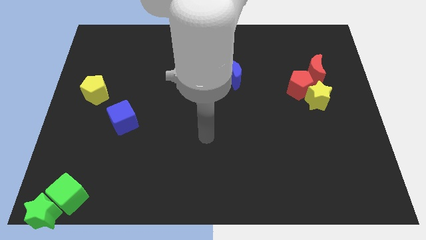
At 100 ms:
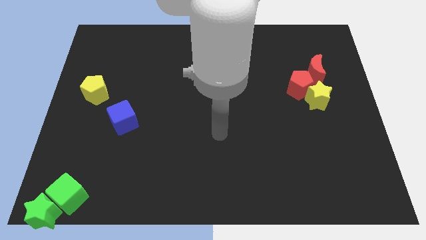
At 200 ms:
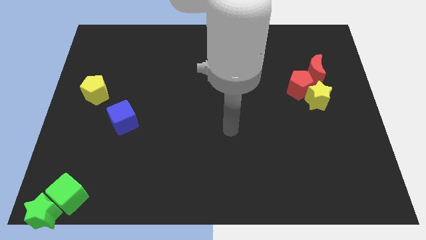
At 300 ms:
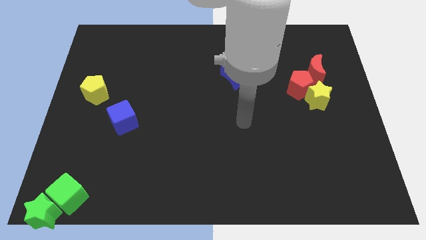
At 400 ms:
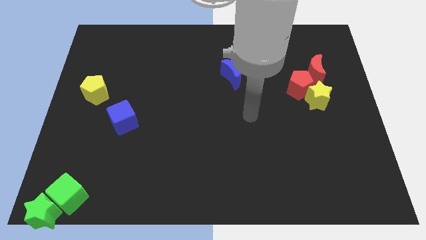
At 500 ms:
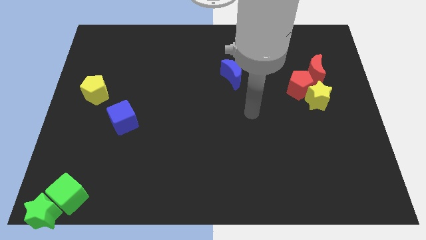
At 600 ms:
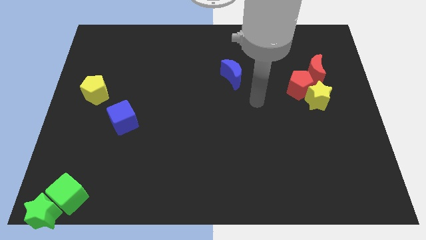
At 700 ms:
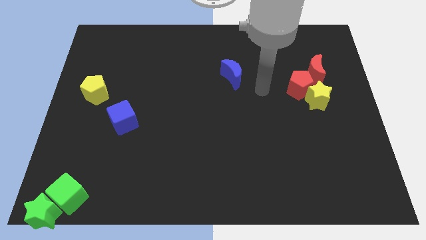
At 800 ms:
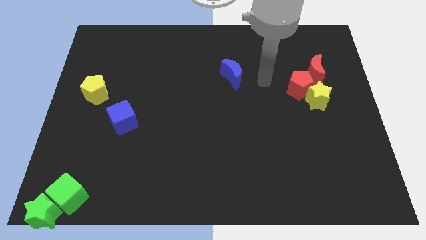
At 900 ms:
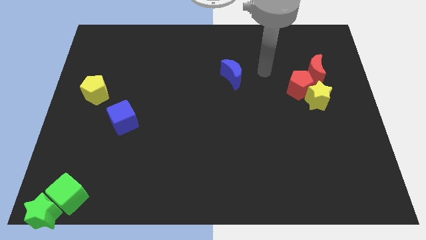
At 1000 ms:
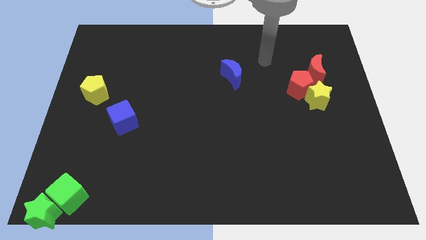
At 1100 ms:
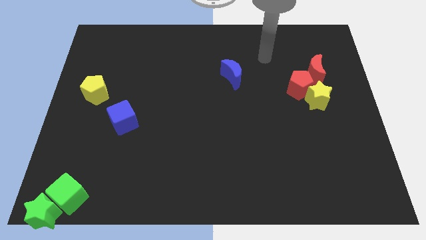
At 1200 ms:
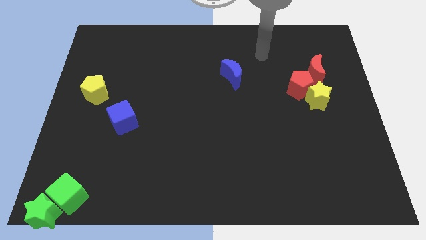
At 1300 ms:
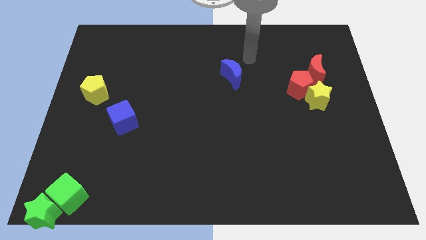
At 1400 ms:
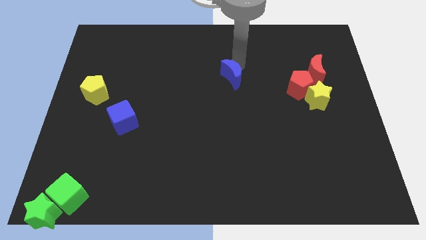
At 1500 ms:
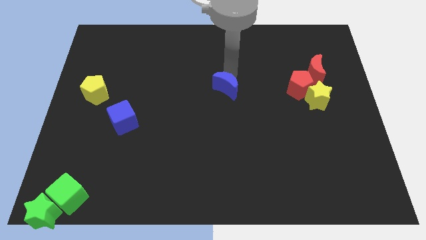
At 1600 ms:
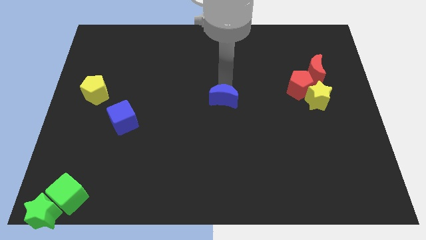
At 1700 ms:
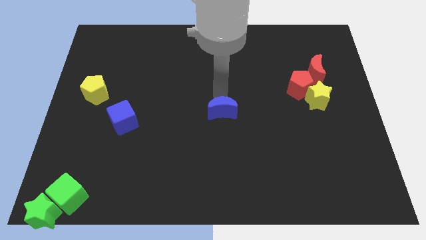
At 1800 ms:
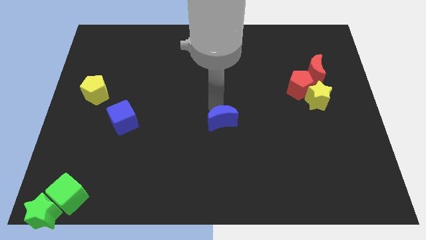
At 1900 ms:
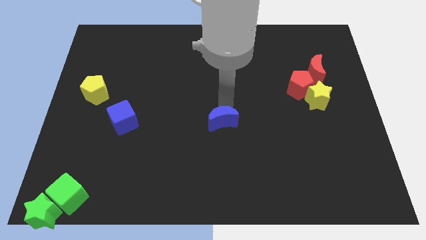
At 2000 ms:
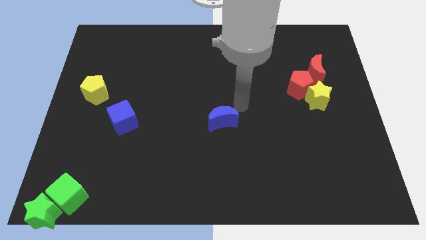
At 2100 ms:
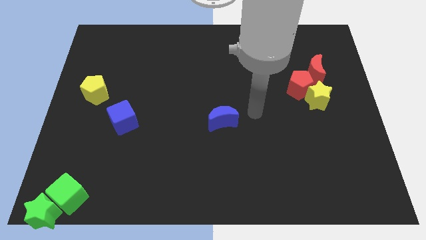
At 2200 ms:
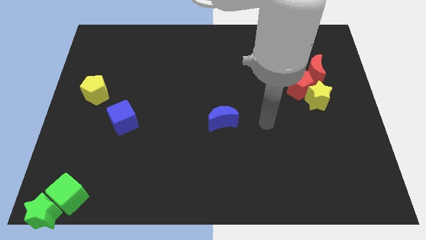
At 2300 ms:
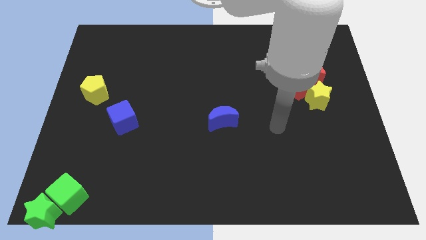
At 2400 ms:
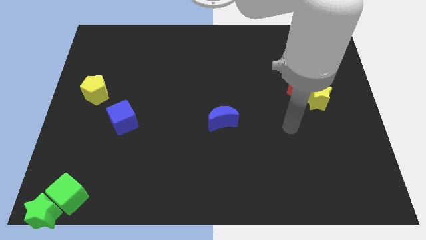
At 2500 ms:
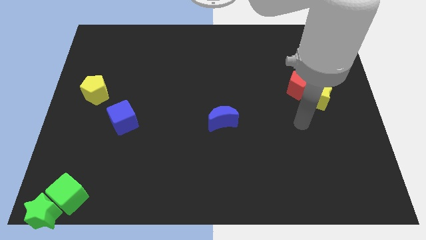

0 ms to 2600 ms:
move blue crescent to the center of the board

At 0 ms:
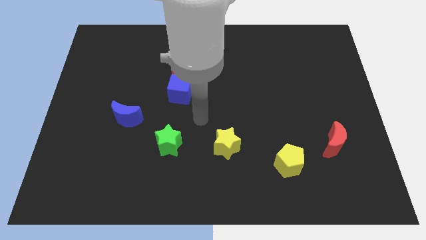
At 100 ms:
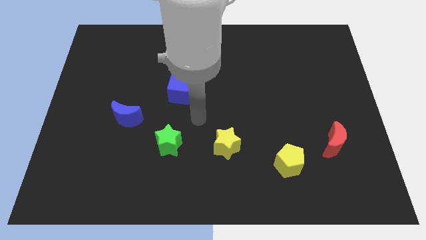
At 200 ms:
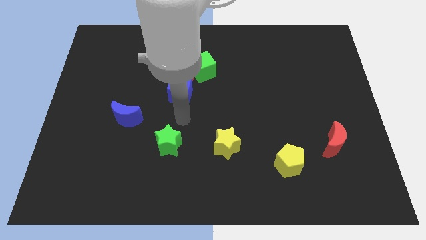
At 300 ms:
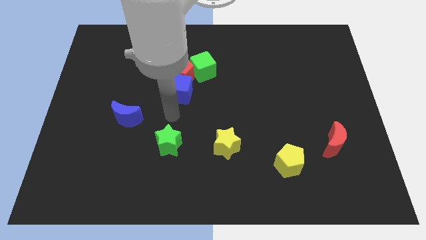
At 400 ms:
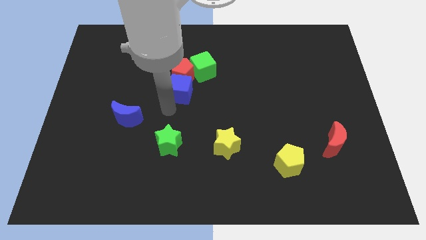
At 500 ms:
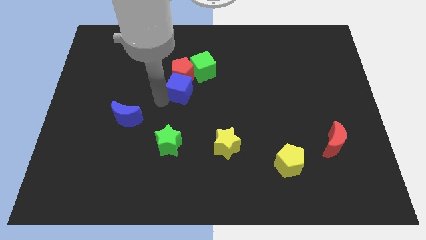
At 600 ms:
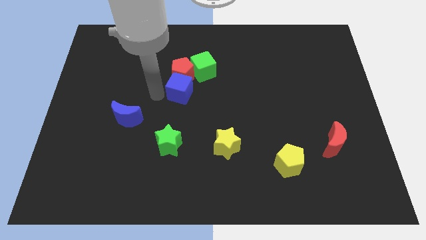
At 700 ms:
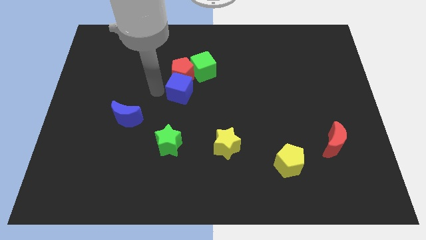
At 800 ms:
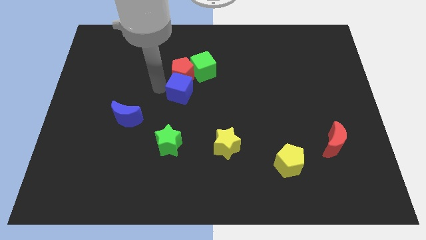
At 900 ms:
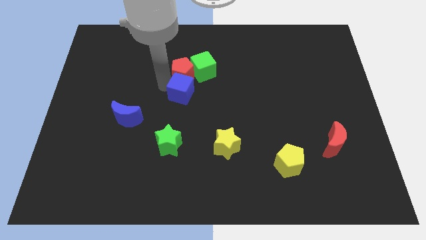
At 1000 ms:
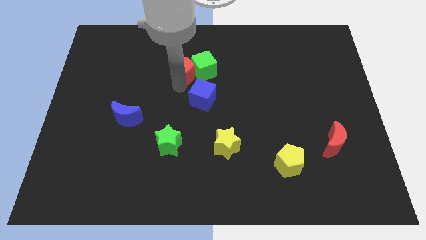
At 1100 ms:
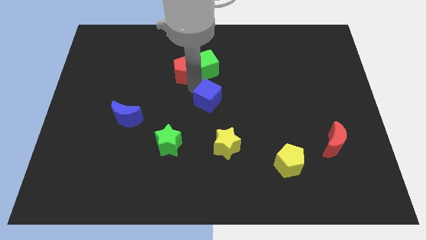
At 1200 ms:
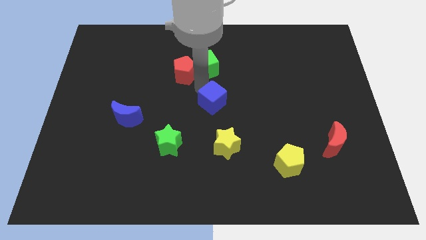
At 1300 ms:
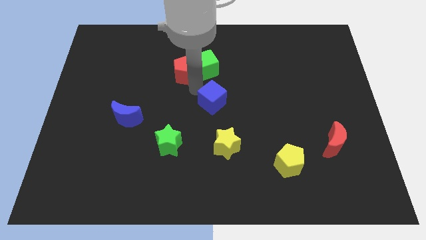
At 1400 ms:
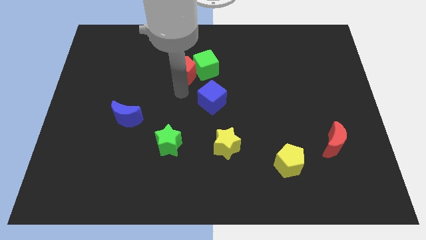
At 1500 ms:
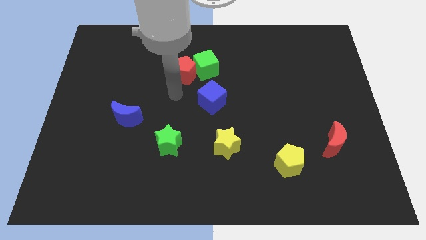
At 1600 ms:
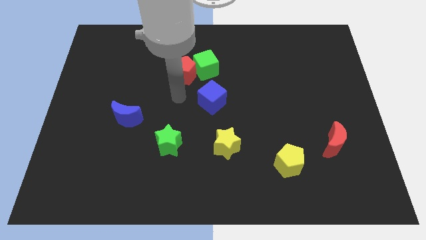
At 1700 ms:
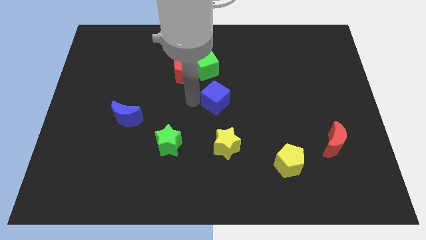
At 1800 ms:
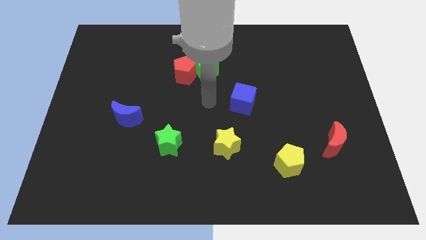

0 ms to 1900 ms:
drag blue cube towards bottom of the green cube

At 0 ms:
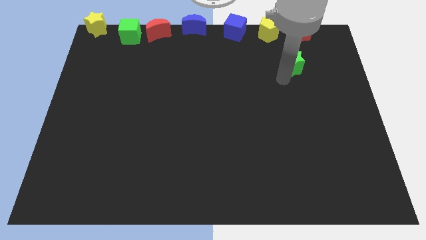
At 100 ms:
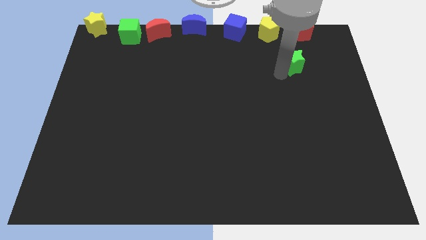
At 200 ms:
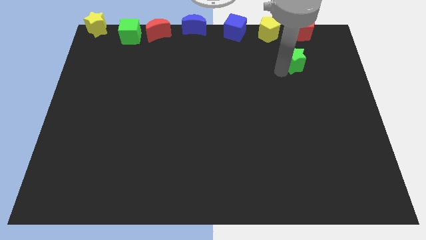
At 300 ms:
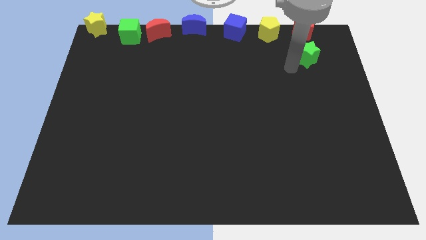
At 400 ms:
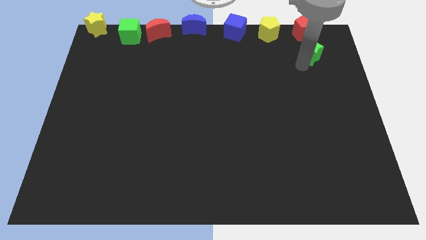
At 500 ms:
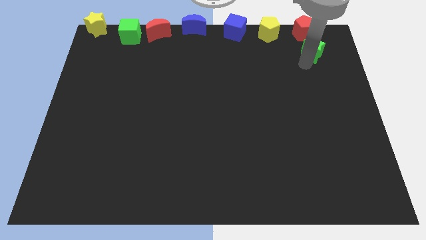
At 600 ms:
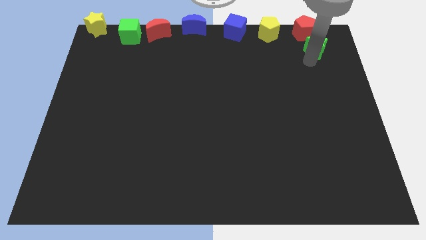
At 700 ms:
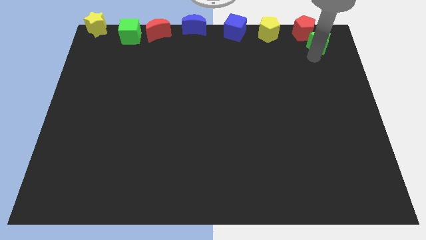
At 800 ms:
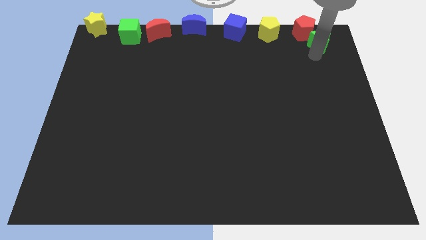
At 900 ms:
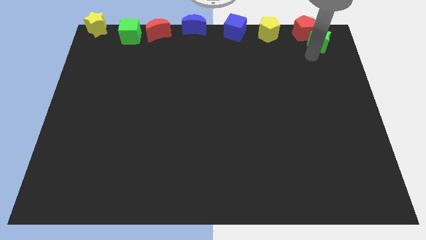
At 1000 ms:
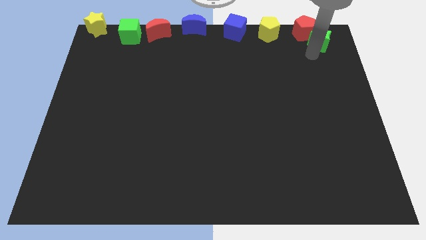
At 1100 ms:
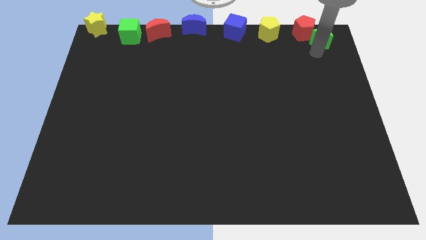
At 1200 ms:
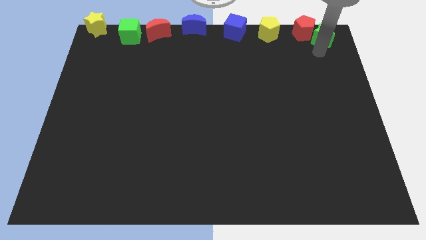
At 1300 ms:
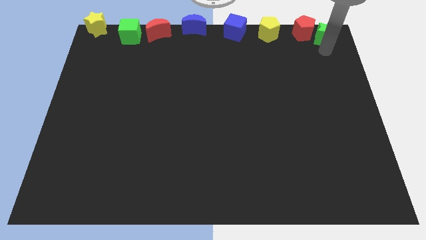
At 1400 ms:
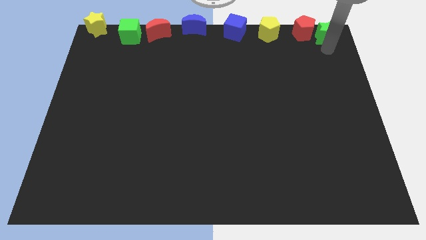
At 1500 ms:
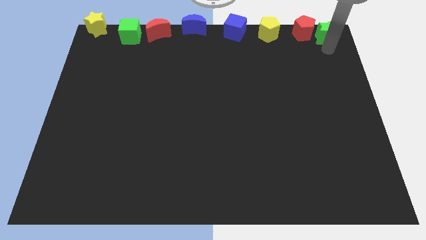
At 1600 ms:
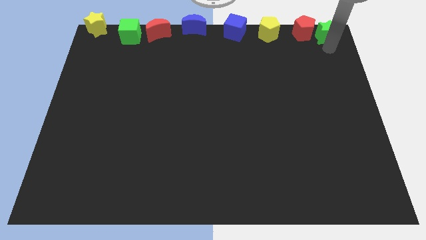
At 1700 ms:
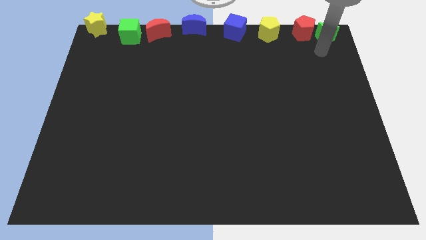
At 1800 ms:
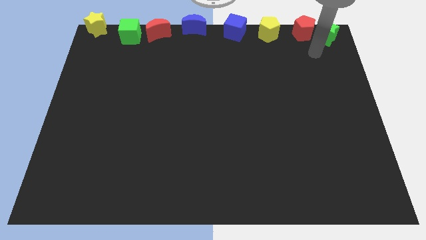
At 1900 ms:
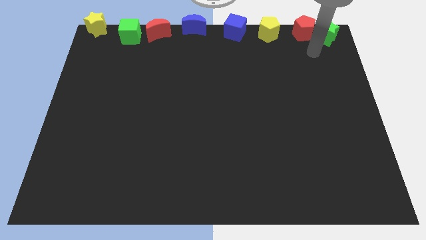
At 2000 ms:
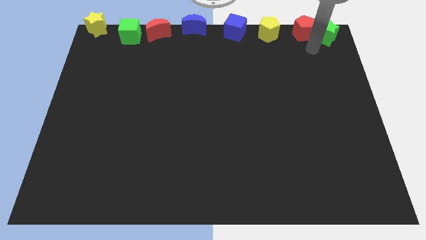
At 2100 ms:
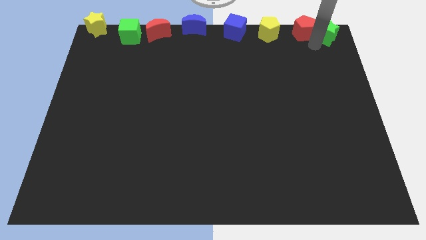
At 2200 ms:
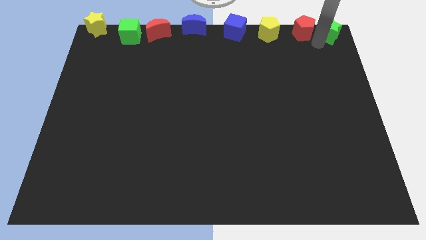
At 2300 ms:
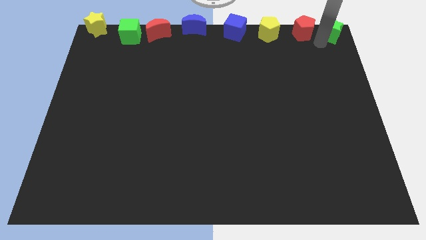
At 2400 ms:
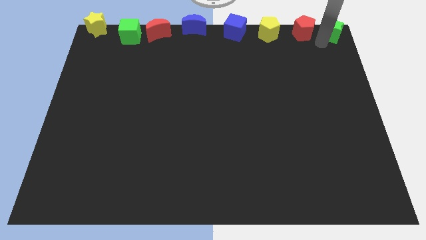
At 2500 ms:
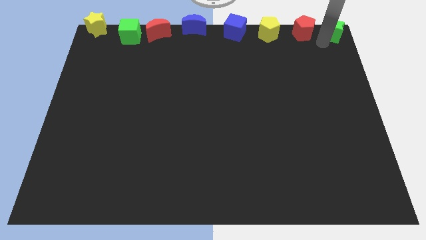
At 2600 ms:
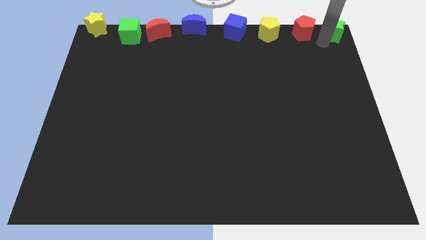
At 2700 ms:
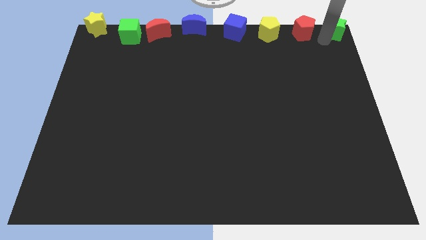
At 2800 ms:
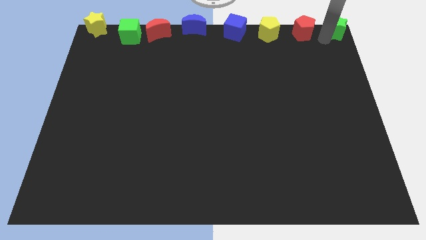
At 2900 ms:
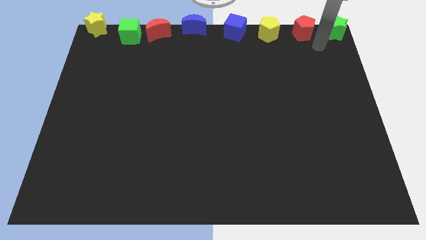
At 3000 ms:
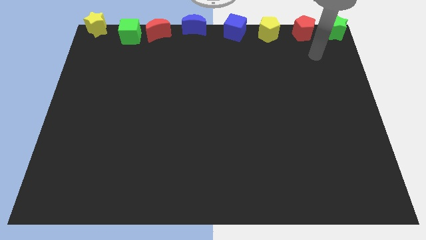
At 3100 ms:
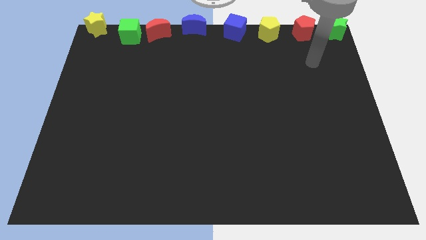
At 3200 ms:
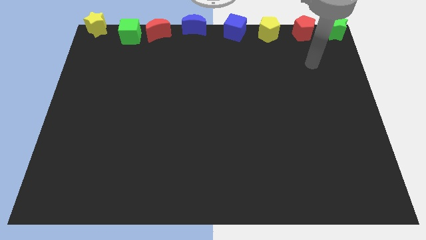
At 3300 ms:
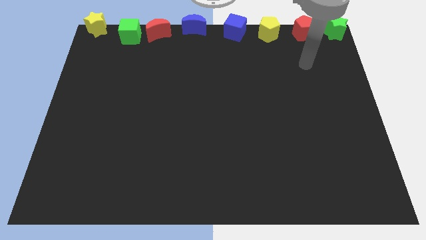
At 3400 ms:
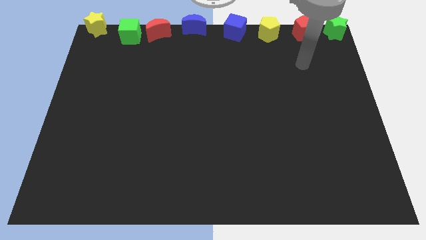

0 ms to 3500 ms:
place the green star towards the top right corner of the board

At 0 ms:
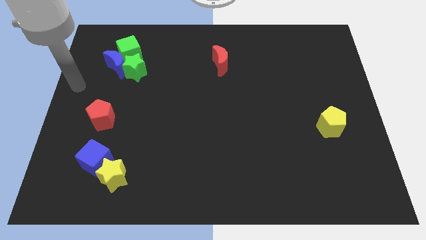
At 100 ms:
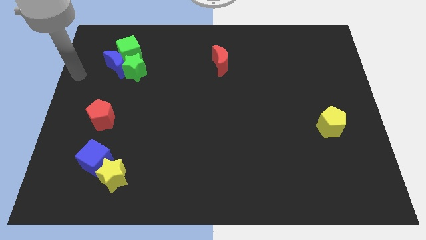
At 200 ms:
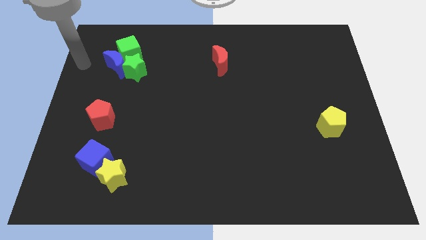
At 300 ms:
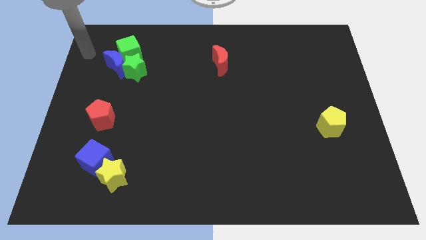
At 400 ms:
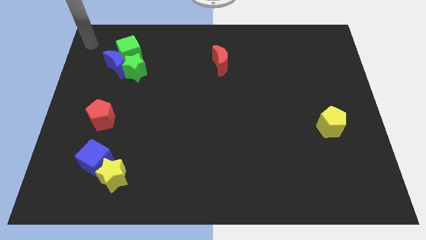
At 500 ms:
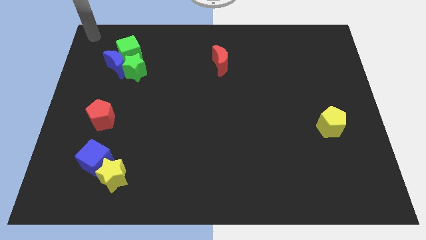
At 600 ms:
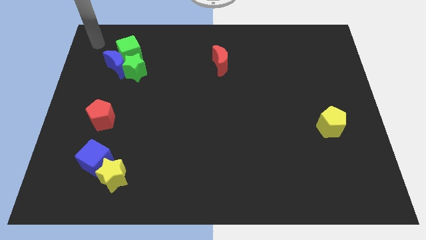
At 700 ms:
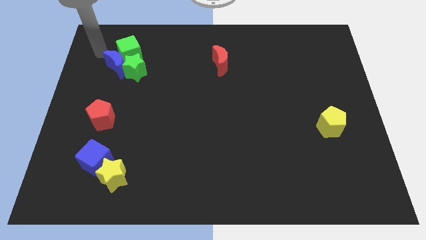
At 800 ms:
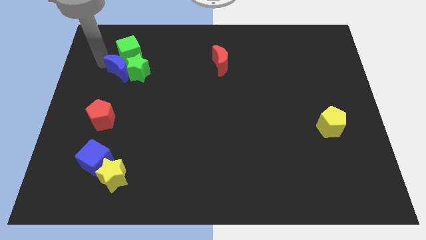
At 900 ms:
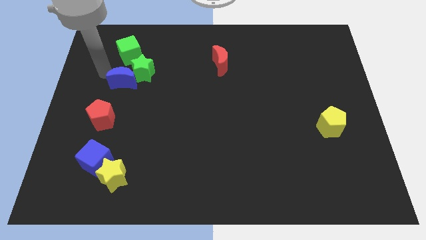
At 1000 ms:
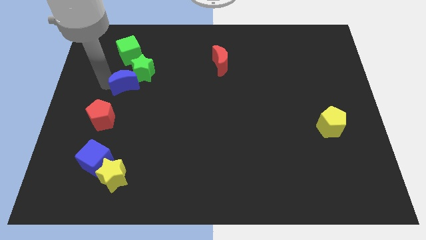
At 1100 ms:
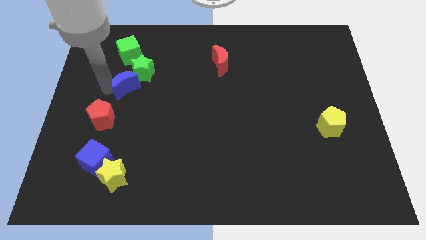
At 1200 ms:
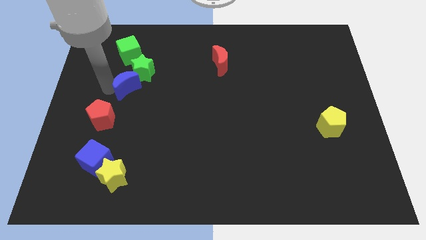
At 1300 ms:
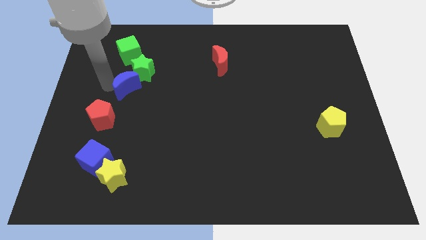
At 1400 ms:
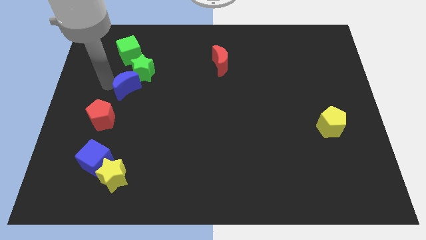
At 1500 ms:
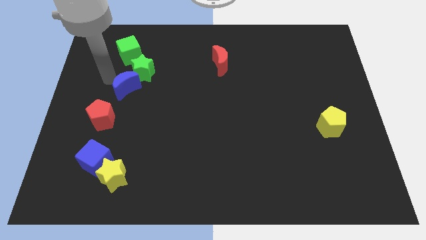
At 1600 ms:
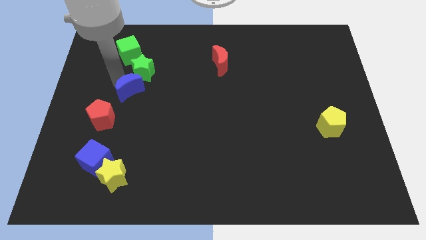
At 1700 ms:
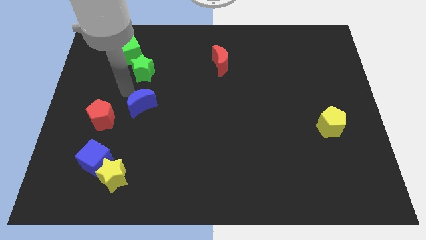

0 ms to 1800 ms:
put the blue moon vertically below the green star
